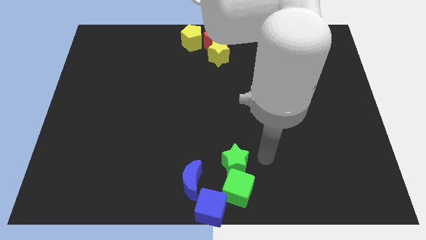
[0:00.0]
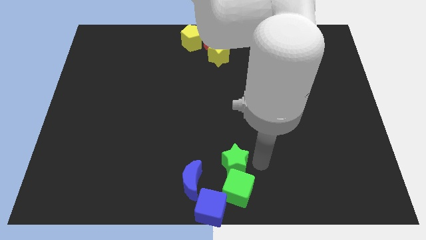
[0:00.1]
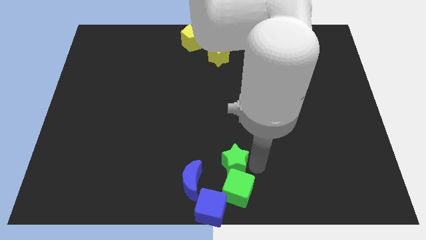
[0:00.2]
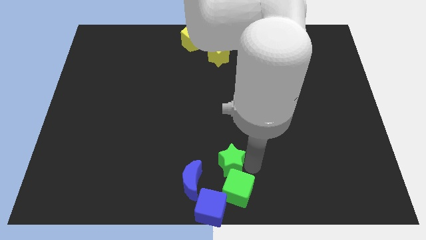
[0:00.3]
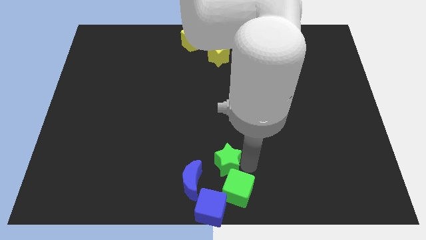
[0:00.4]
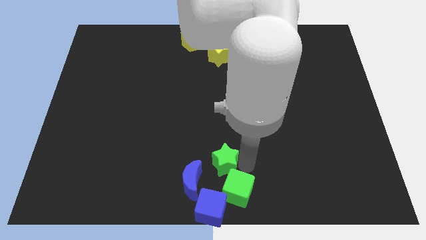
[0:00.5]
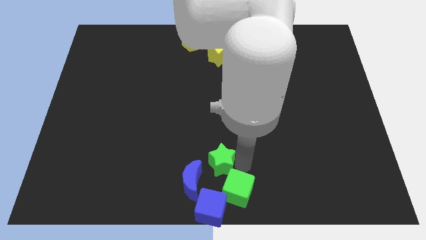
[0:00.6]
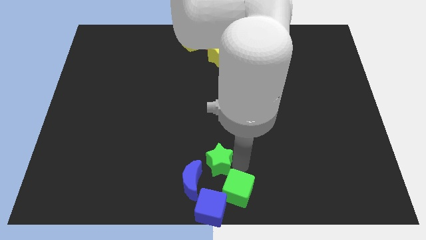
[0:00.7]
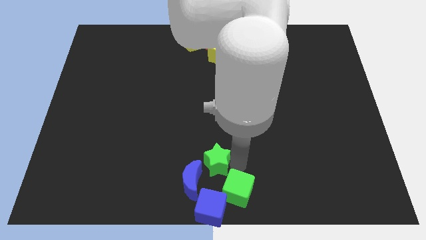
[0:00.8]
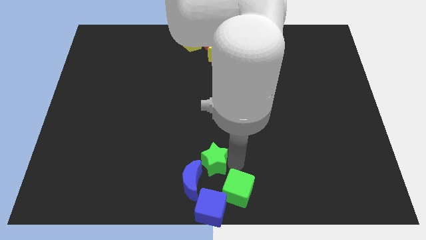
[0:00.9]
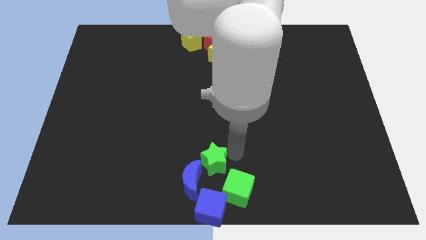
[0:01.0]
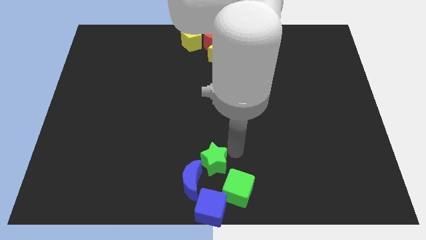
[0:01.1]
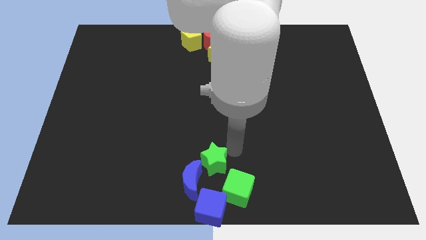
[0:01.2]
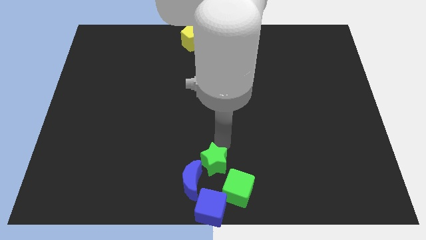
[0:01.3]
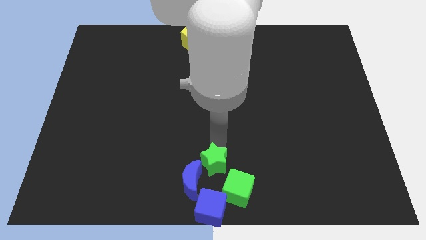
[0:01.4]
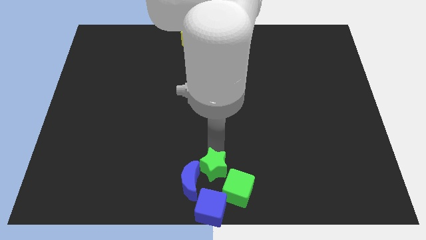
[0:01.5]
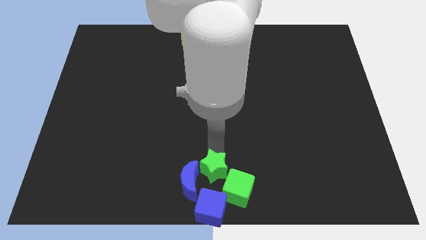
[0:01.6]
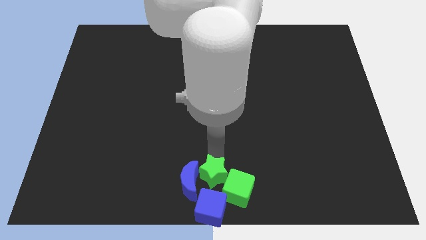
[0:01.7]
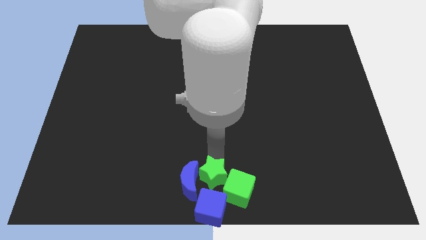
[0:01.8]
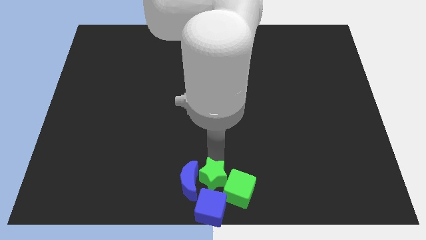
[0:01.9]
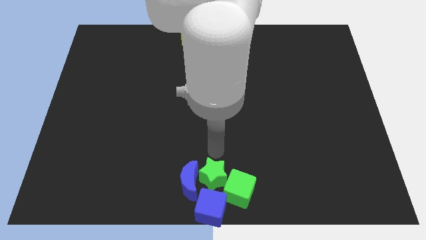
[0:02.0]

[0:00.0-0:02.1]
push green star in between the green cube and blue crescent

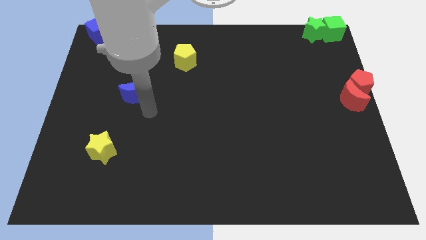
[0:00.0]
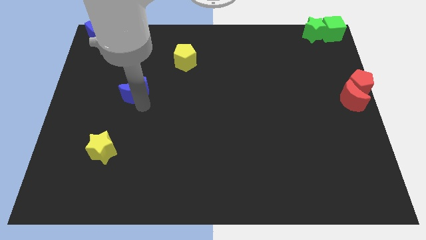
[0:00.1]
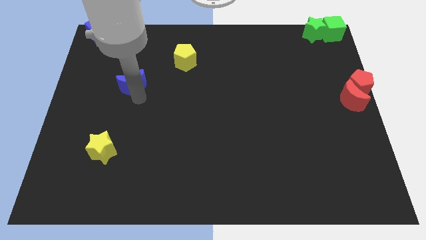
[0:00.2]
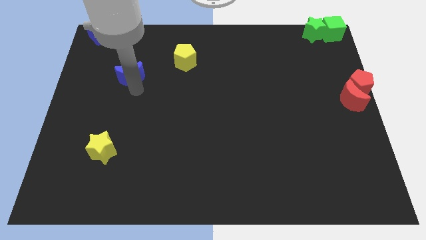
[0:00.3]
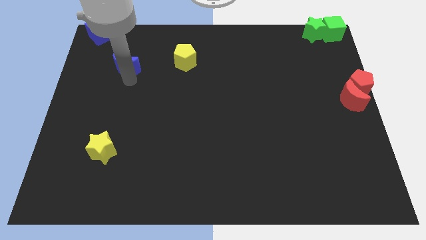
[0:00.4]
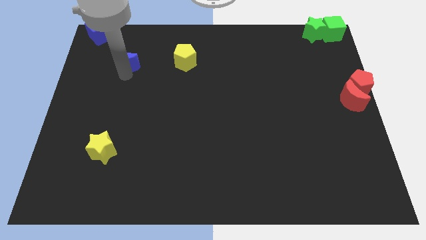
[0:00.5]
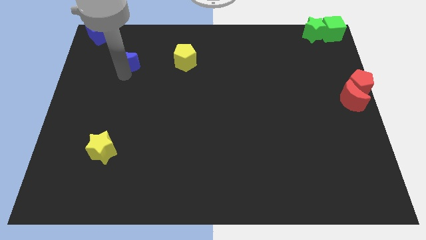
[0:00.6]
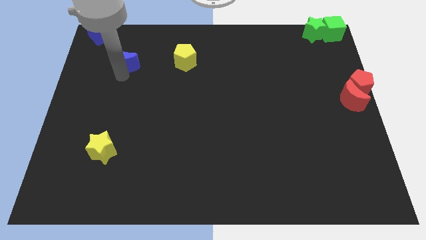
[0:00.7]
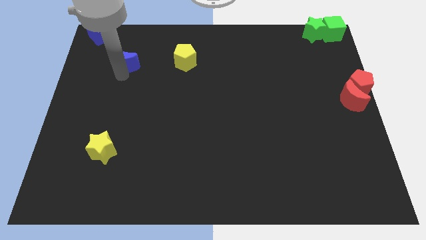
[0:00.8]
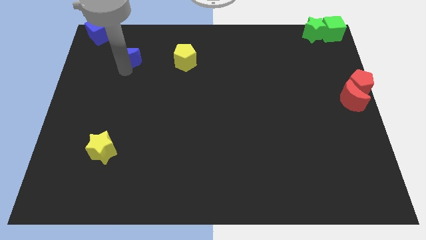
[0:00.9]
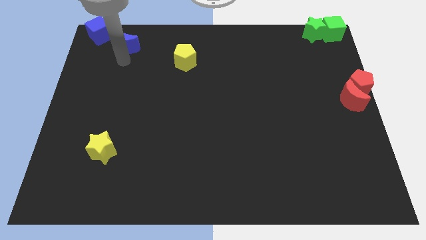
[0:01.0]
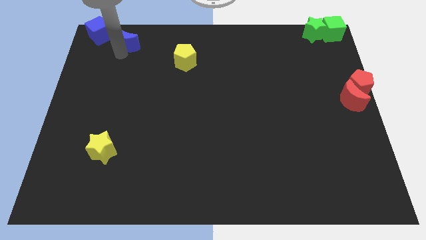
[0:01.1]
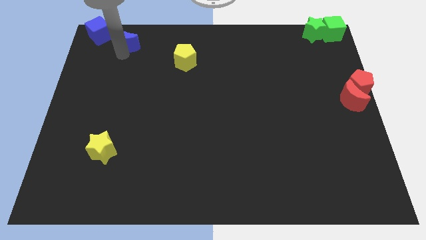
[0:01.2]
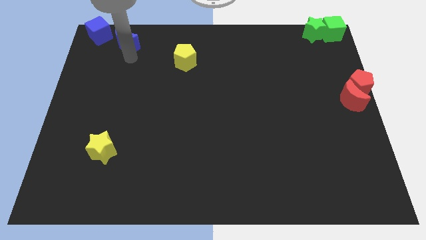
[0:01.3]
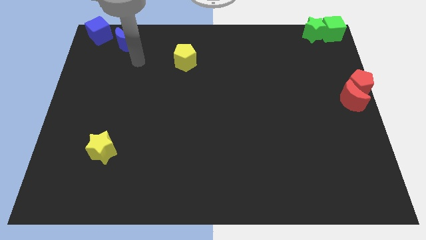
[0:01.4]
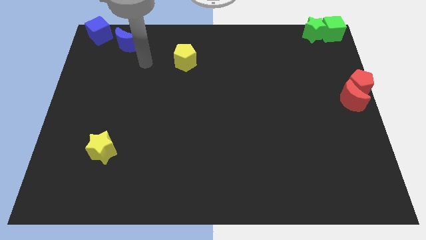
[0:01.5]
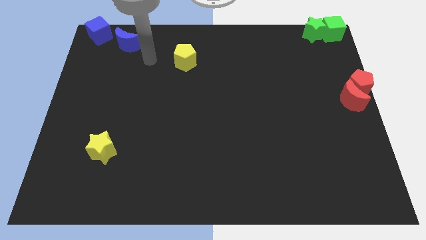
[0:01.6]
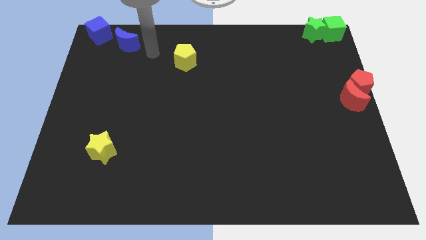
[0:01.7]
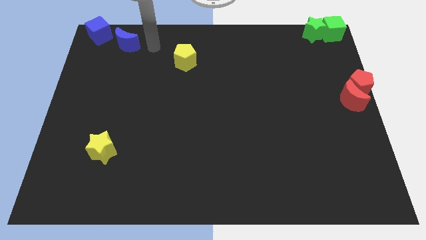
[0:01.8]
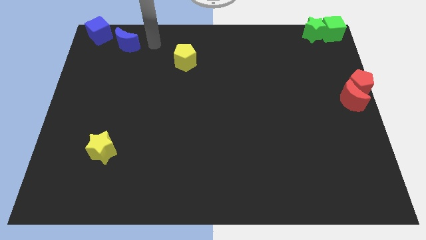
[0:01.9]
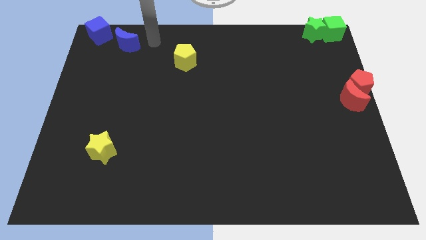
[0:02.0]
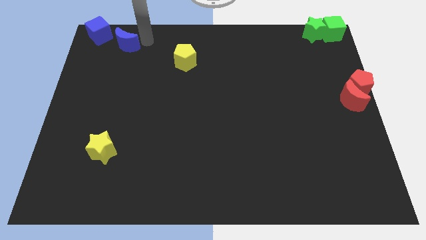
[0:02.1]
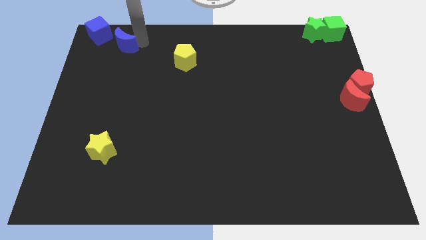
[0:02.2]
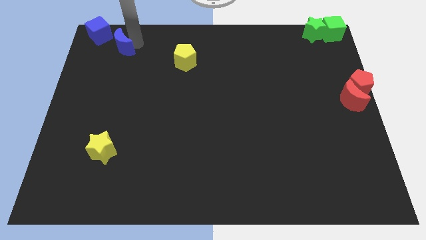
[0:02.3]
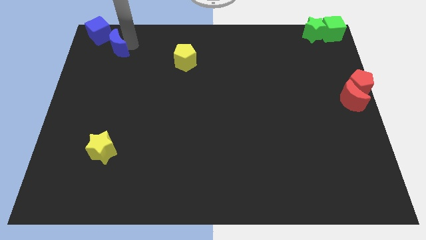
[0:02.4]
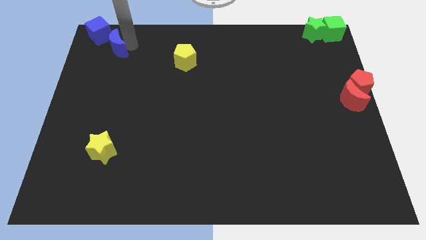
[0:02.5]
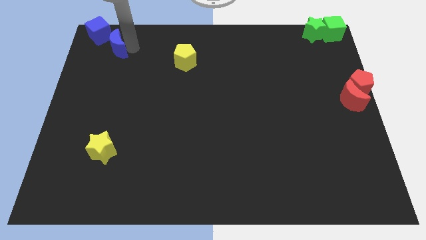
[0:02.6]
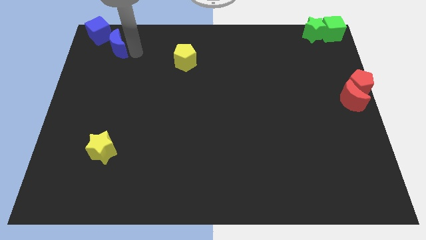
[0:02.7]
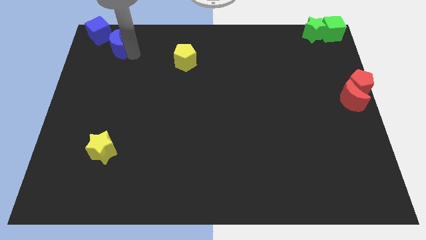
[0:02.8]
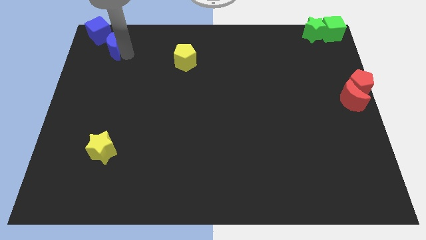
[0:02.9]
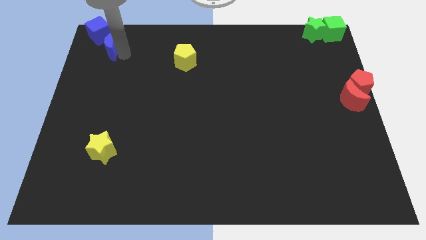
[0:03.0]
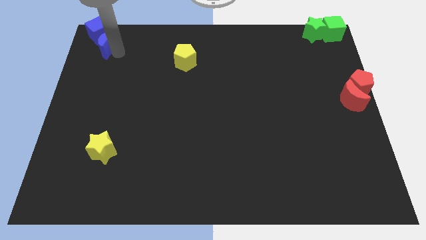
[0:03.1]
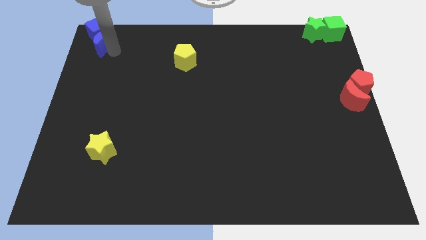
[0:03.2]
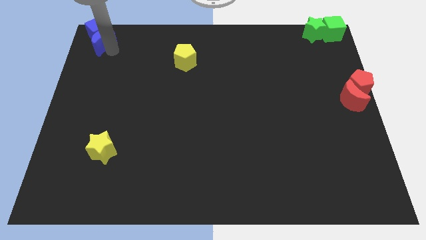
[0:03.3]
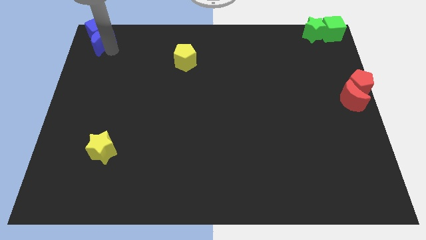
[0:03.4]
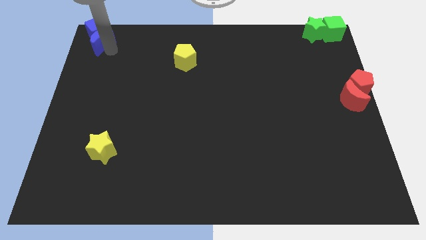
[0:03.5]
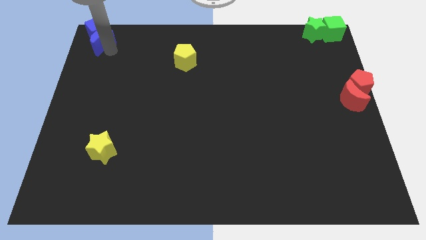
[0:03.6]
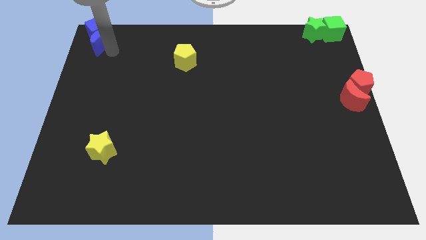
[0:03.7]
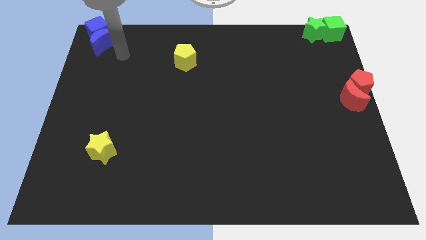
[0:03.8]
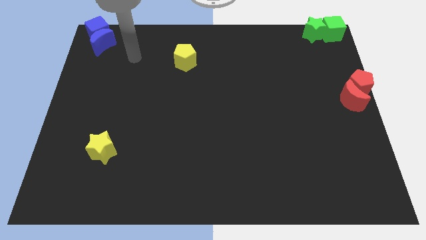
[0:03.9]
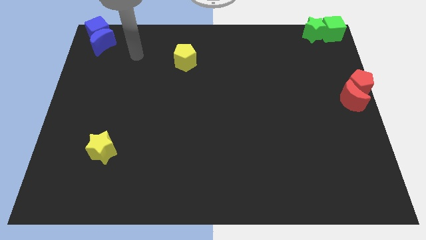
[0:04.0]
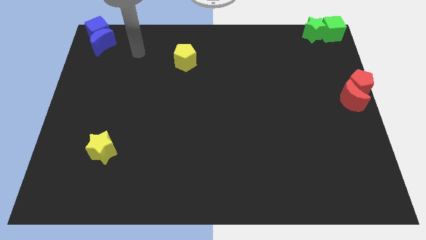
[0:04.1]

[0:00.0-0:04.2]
slide the blue crescent into the blue cube

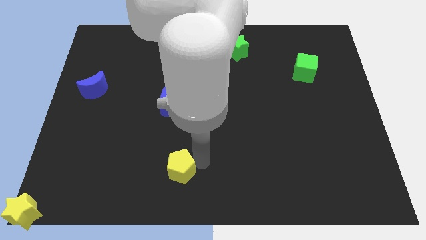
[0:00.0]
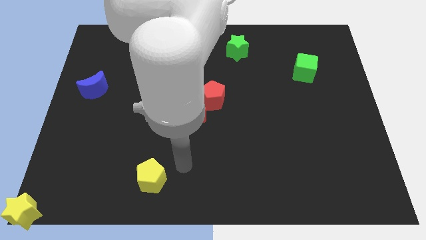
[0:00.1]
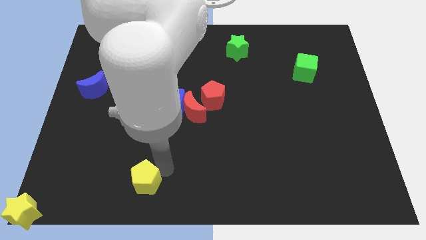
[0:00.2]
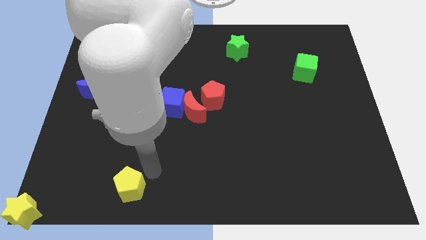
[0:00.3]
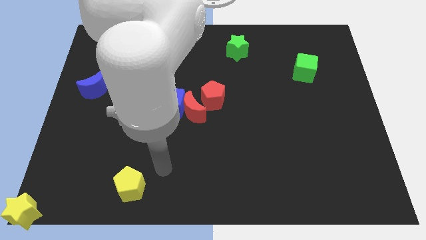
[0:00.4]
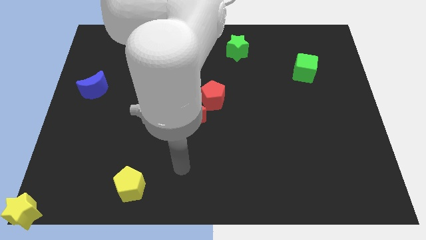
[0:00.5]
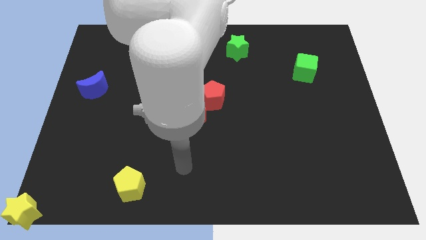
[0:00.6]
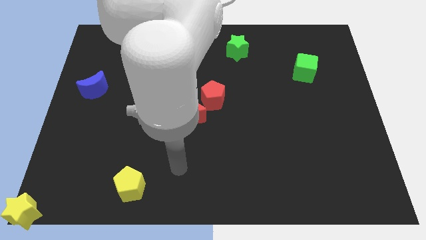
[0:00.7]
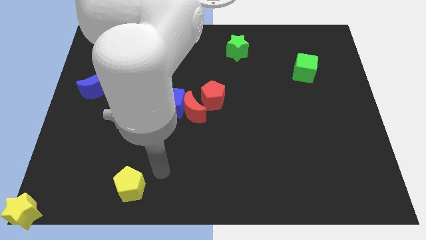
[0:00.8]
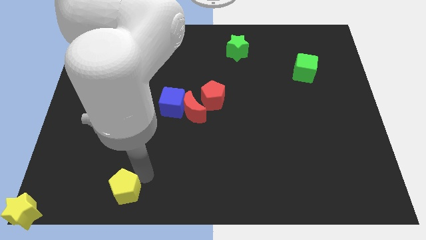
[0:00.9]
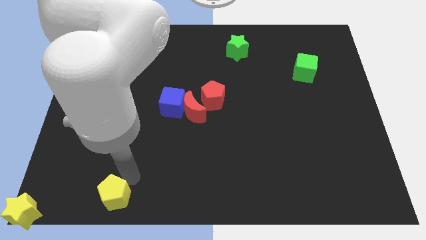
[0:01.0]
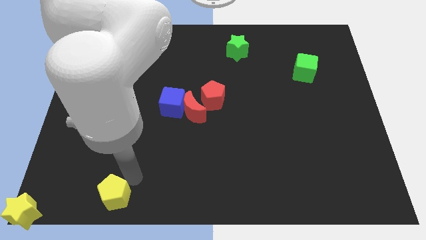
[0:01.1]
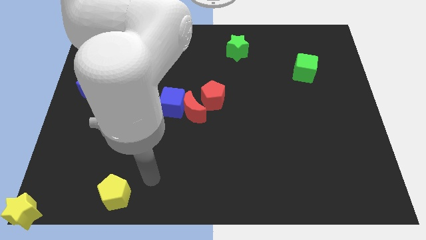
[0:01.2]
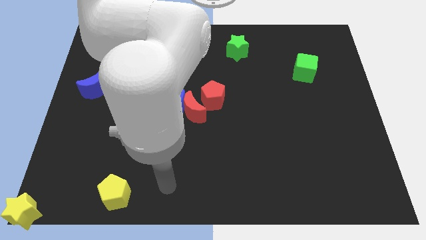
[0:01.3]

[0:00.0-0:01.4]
slide yellow pentagon slightly to left of the board

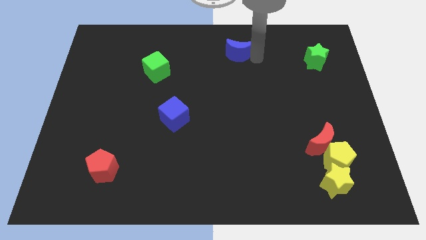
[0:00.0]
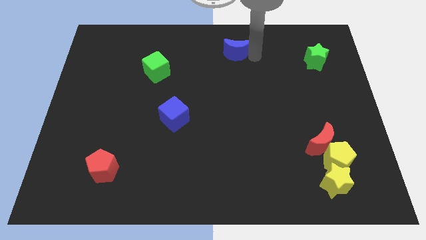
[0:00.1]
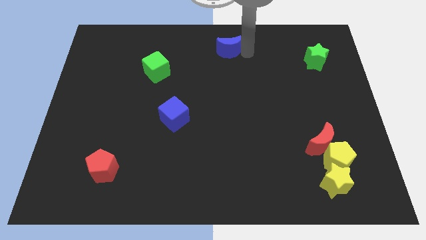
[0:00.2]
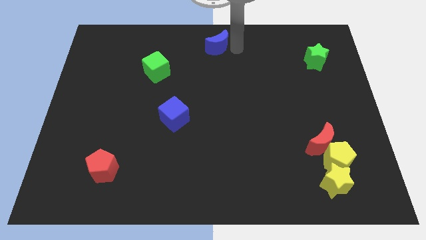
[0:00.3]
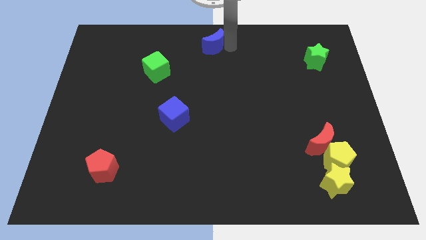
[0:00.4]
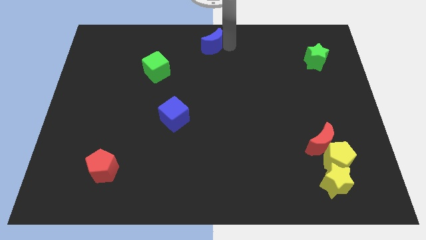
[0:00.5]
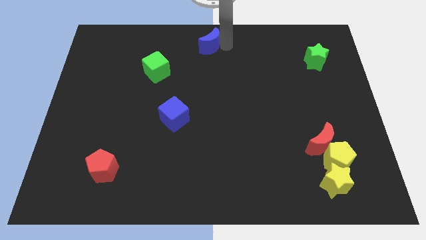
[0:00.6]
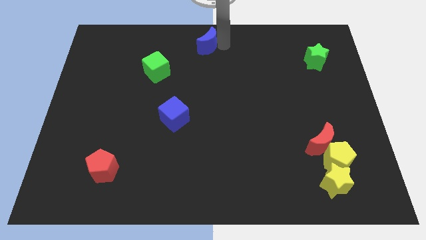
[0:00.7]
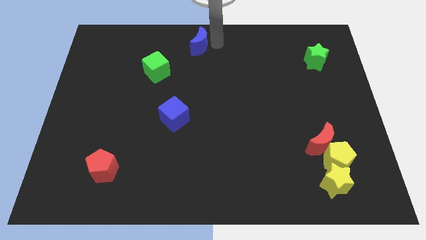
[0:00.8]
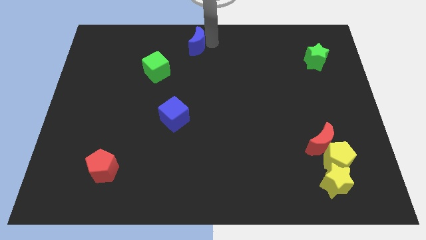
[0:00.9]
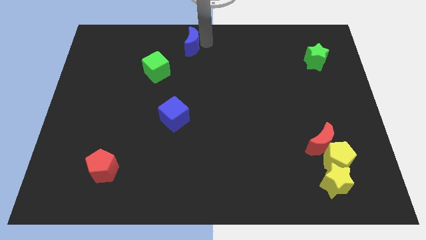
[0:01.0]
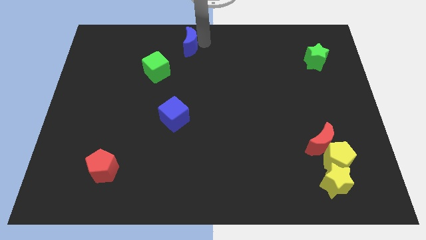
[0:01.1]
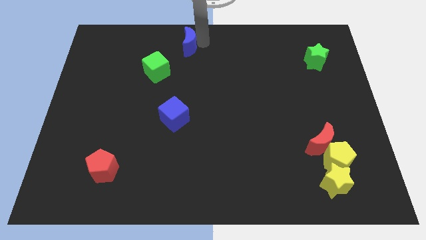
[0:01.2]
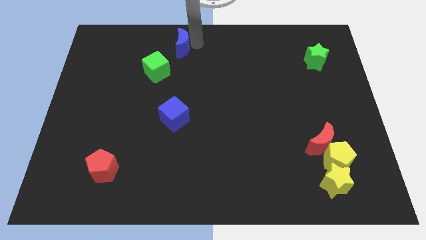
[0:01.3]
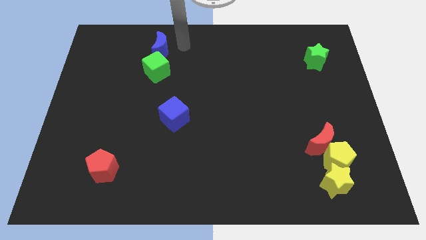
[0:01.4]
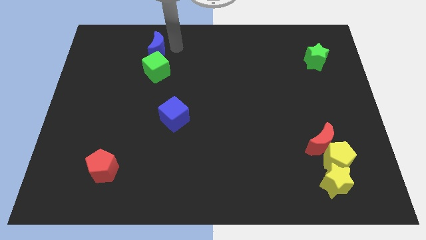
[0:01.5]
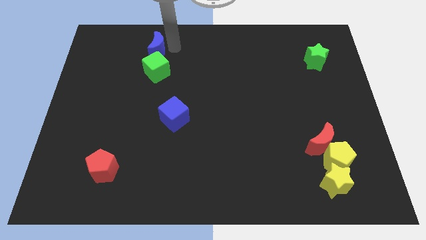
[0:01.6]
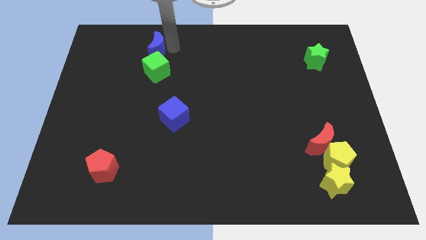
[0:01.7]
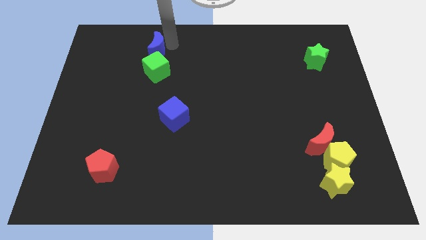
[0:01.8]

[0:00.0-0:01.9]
put the blue crescent to the top side of the green cube
